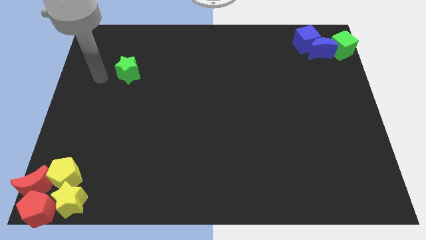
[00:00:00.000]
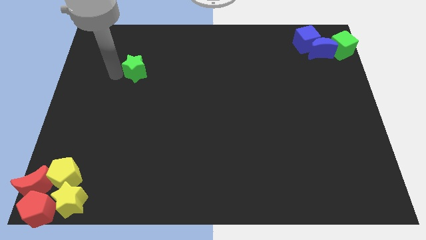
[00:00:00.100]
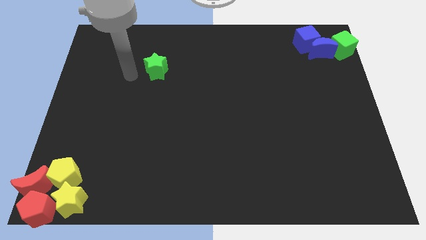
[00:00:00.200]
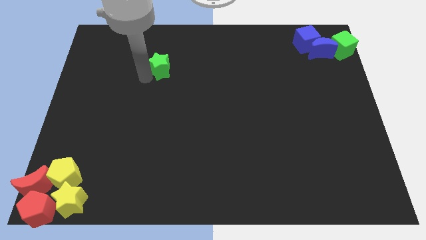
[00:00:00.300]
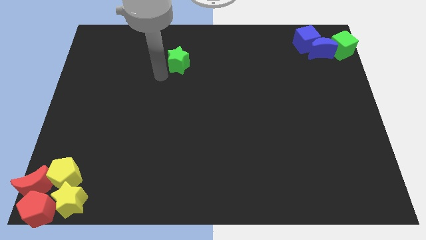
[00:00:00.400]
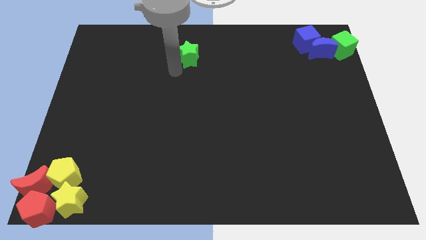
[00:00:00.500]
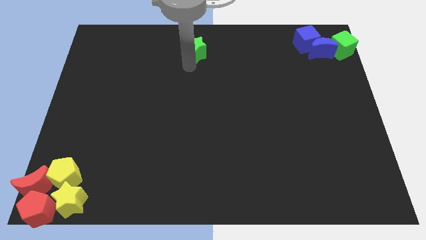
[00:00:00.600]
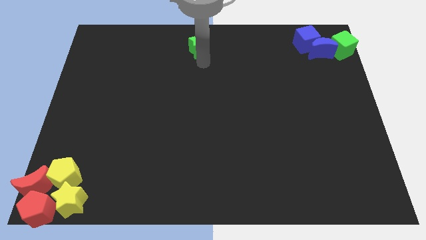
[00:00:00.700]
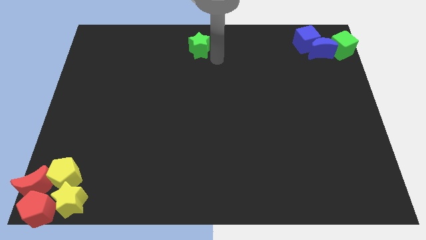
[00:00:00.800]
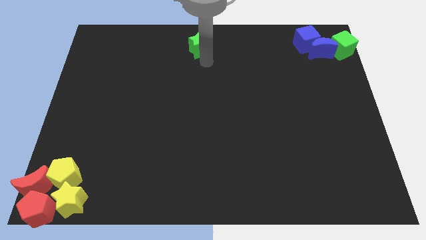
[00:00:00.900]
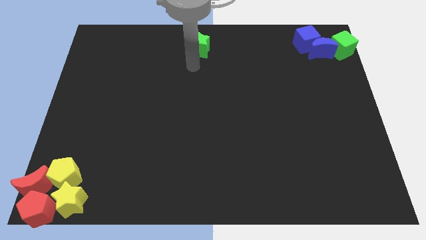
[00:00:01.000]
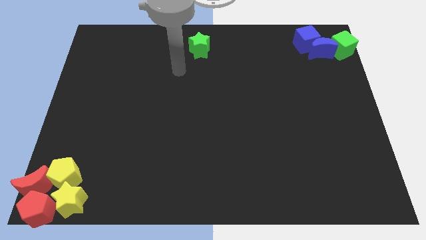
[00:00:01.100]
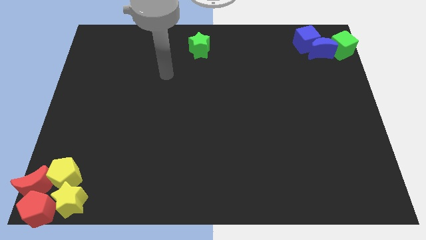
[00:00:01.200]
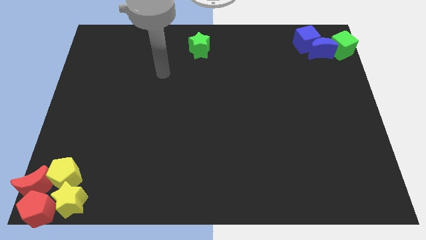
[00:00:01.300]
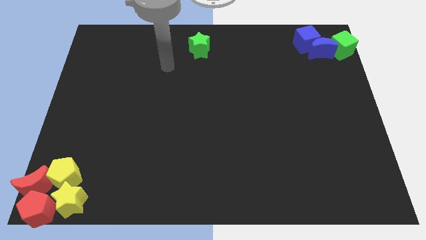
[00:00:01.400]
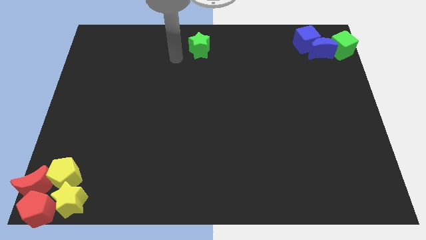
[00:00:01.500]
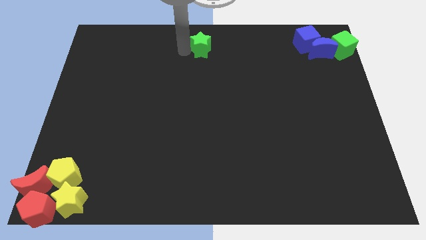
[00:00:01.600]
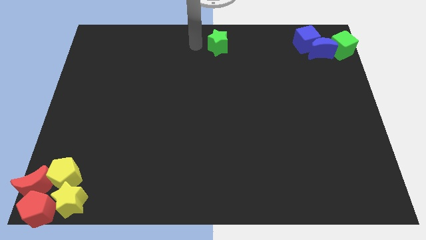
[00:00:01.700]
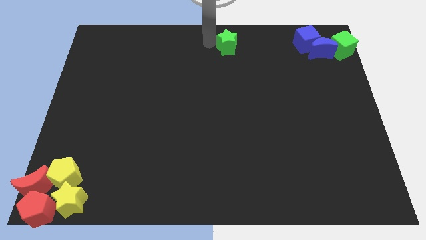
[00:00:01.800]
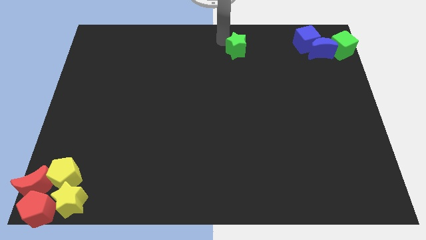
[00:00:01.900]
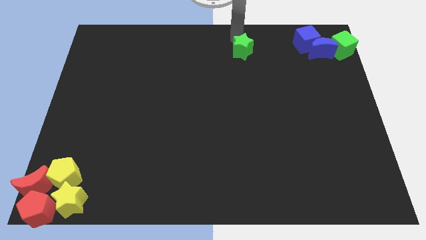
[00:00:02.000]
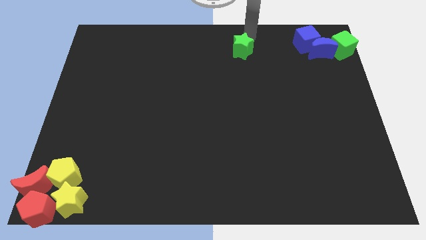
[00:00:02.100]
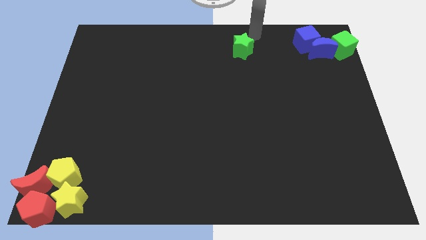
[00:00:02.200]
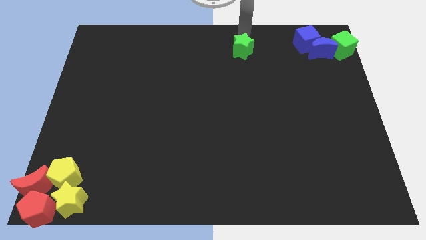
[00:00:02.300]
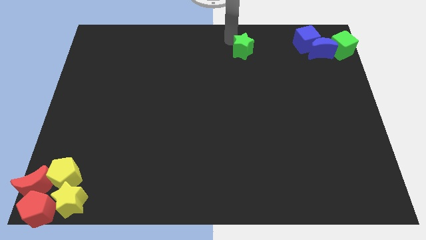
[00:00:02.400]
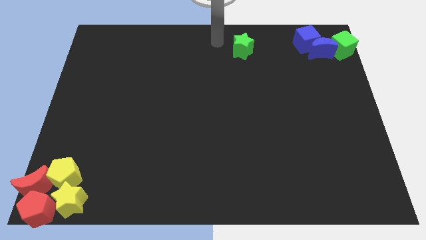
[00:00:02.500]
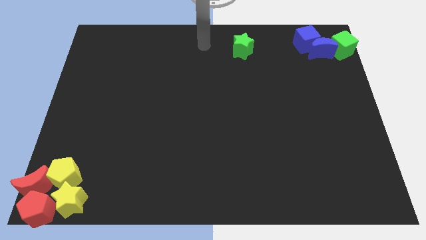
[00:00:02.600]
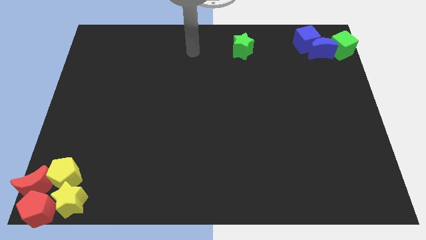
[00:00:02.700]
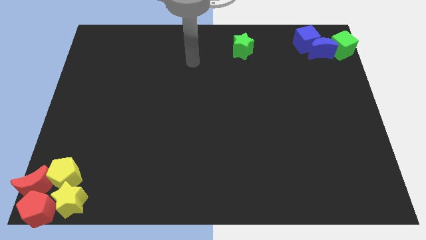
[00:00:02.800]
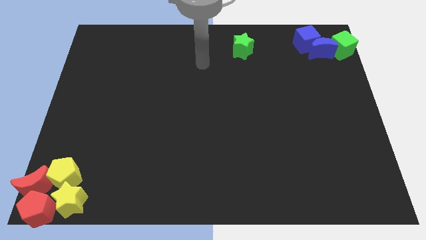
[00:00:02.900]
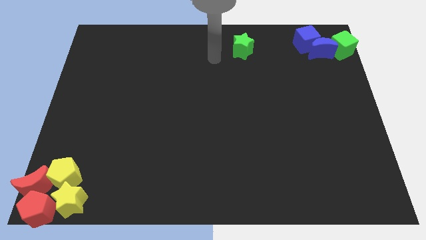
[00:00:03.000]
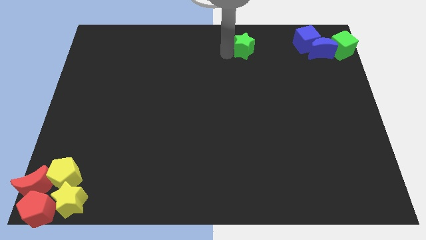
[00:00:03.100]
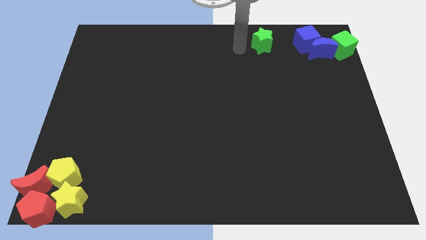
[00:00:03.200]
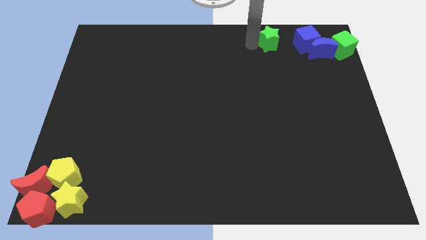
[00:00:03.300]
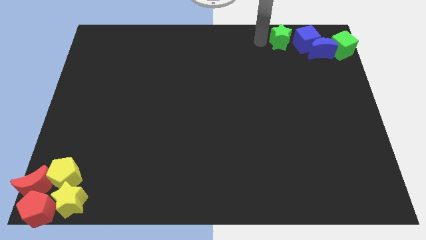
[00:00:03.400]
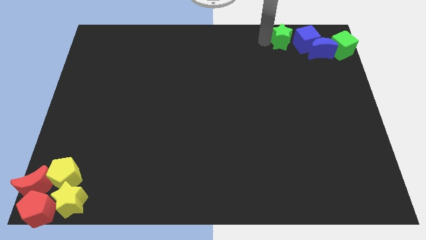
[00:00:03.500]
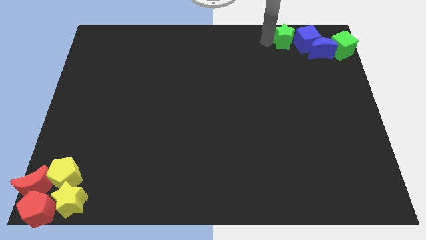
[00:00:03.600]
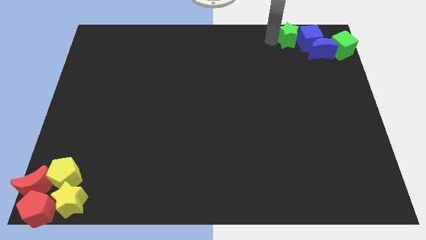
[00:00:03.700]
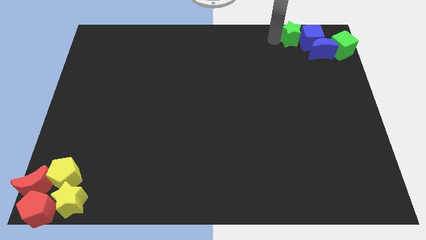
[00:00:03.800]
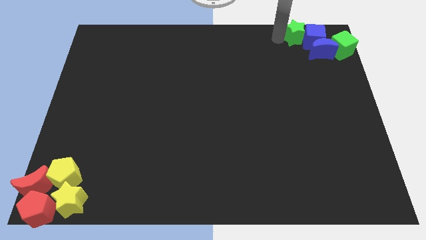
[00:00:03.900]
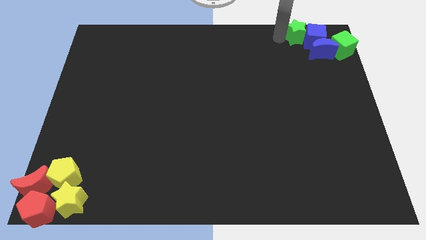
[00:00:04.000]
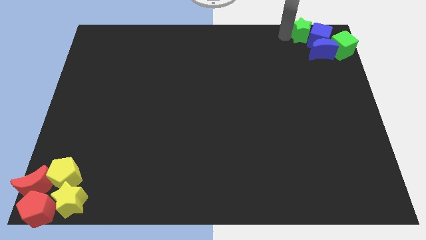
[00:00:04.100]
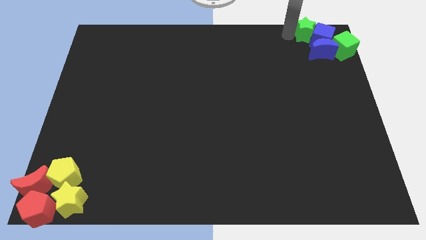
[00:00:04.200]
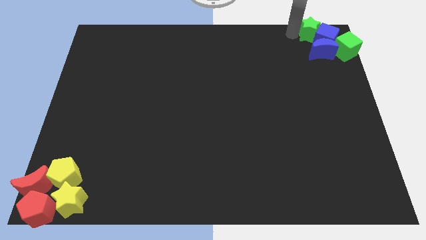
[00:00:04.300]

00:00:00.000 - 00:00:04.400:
place the green star at the top left of the blue cube

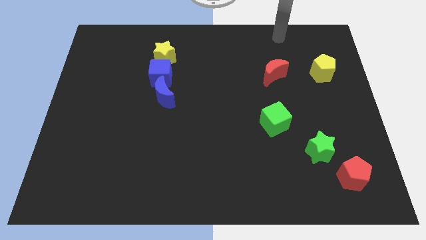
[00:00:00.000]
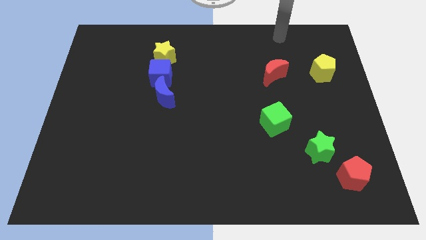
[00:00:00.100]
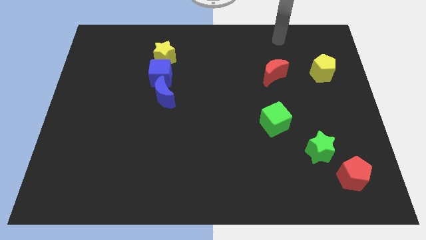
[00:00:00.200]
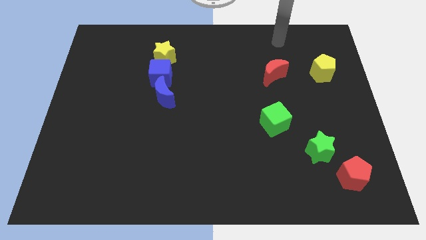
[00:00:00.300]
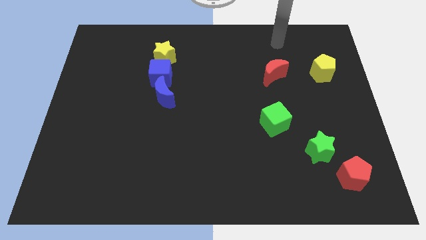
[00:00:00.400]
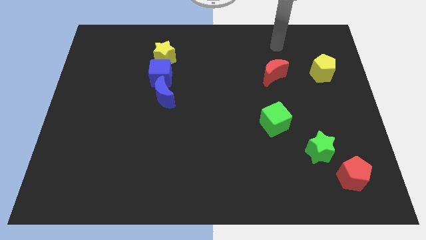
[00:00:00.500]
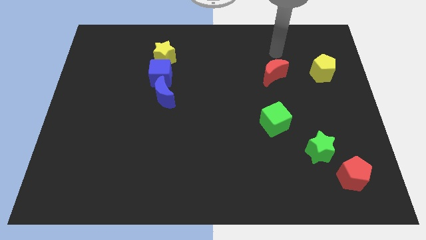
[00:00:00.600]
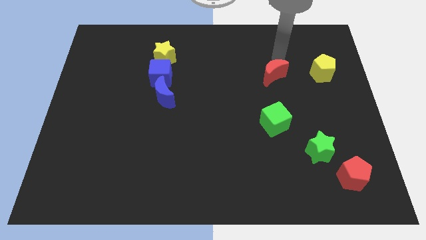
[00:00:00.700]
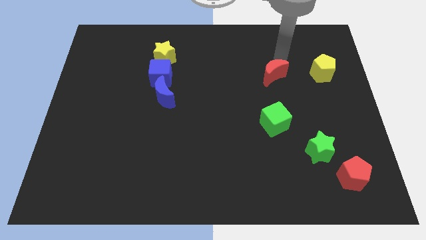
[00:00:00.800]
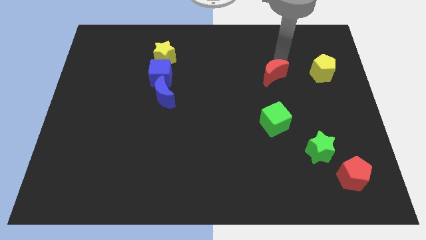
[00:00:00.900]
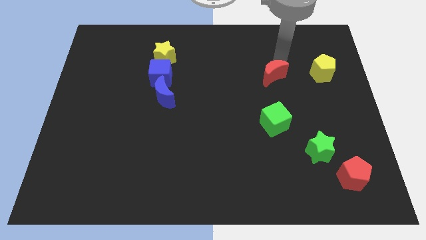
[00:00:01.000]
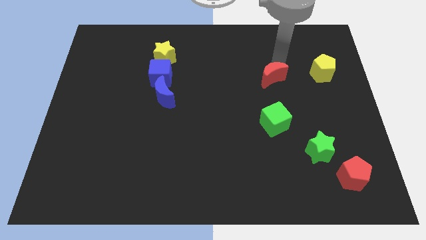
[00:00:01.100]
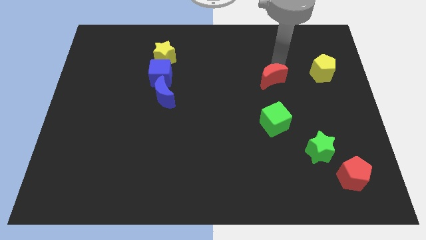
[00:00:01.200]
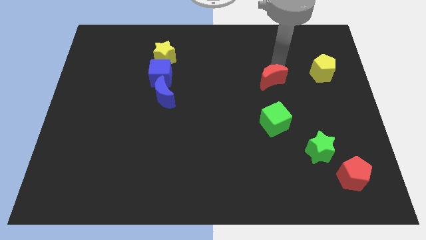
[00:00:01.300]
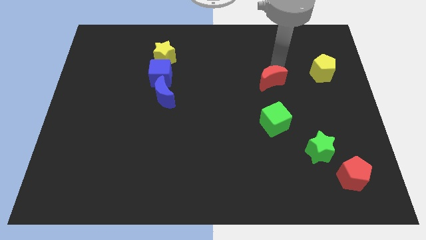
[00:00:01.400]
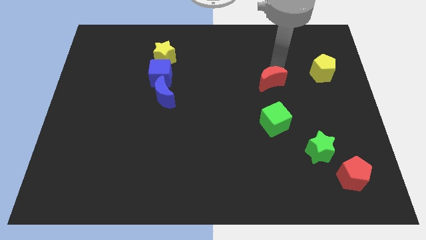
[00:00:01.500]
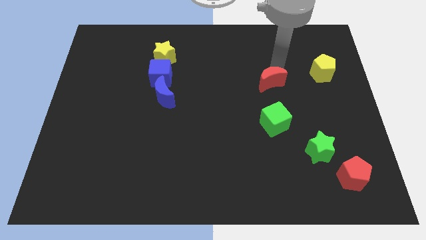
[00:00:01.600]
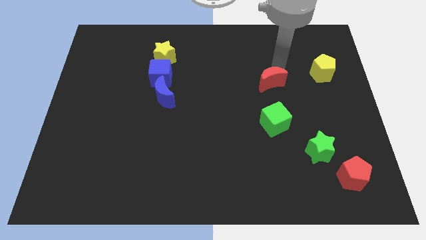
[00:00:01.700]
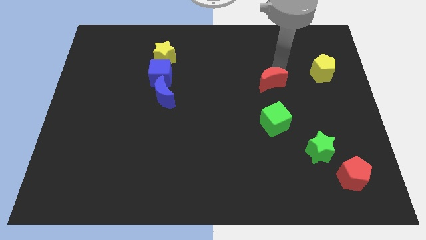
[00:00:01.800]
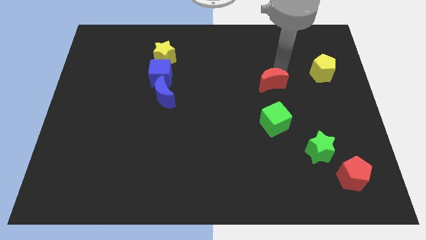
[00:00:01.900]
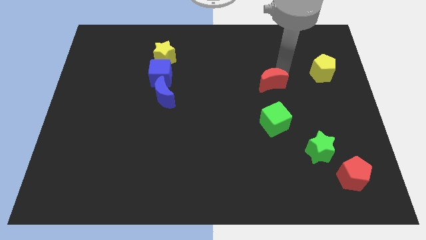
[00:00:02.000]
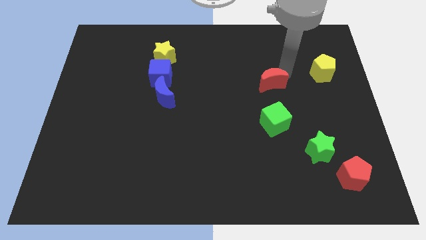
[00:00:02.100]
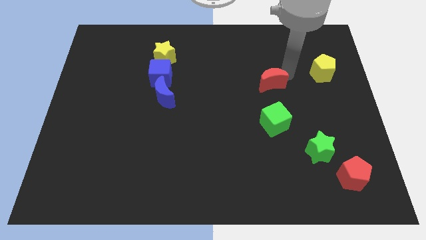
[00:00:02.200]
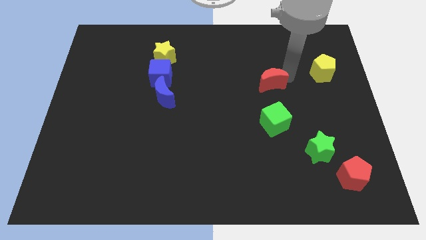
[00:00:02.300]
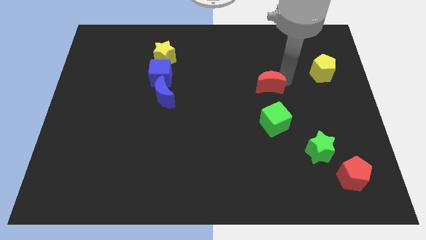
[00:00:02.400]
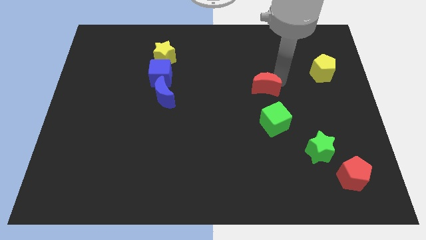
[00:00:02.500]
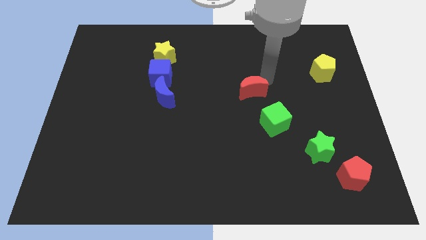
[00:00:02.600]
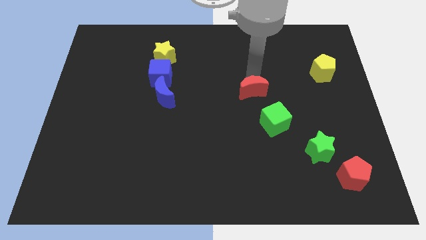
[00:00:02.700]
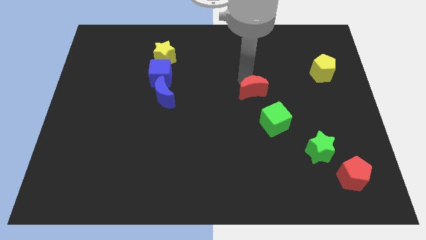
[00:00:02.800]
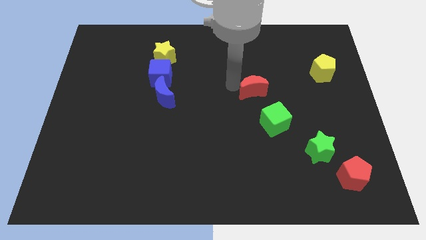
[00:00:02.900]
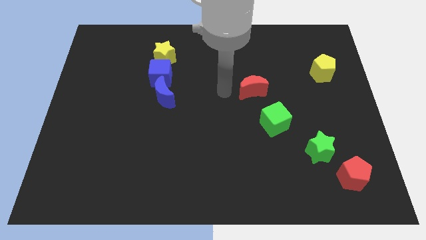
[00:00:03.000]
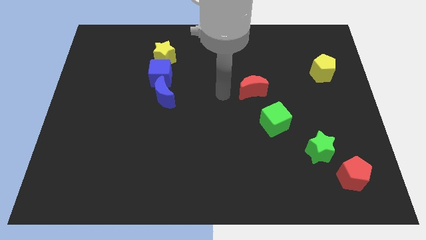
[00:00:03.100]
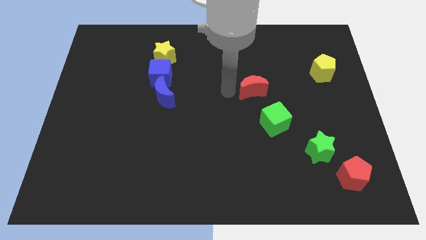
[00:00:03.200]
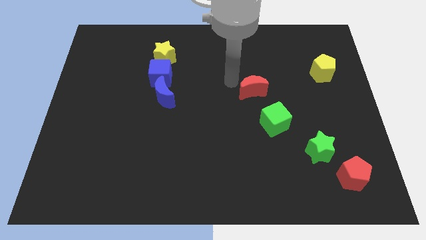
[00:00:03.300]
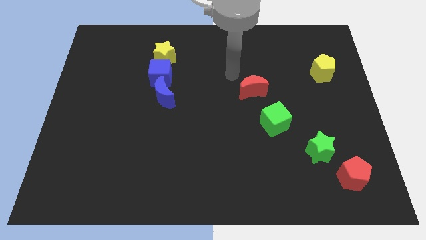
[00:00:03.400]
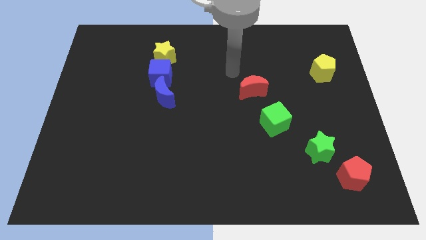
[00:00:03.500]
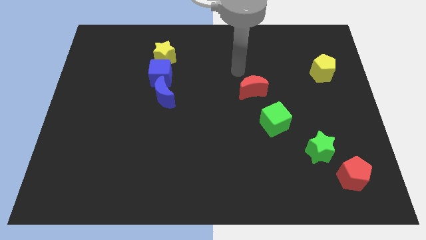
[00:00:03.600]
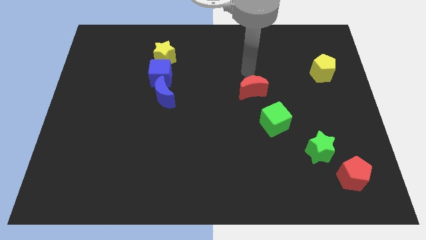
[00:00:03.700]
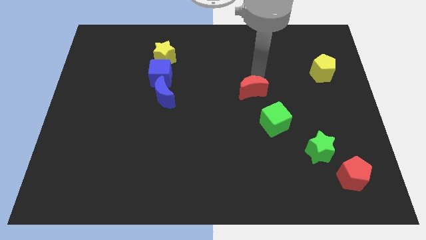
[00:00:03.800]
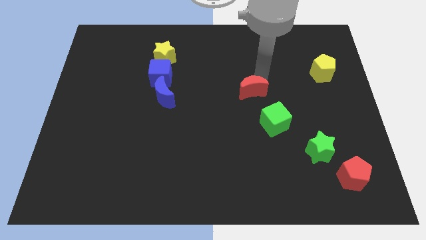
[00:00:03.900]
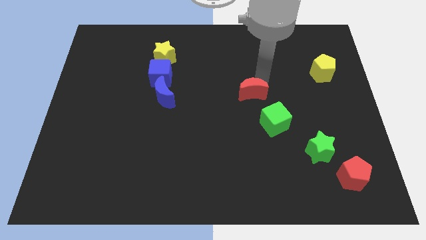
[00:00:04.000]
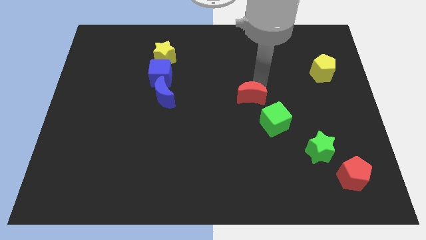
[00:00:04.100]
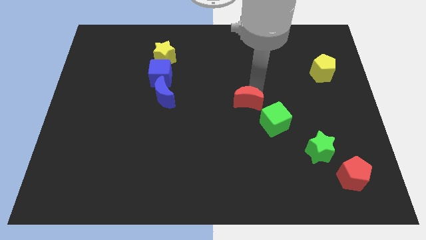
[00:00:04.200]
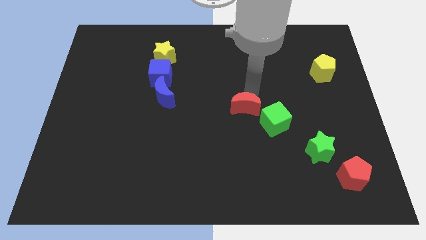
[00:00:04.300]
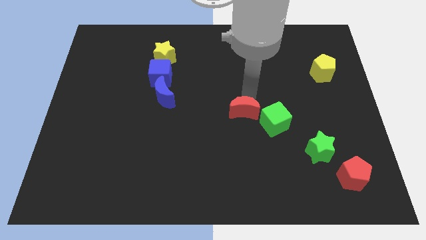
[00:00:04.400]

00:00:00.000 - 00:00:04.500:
place the red moon at the top left of green cube

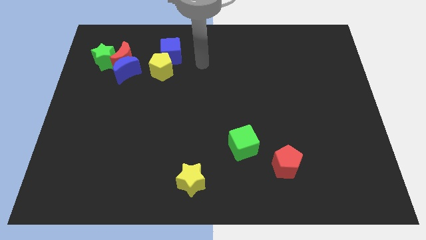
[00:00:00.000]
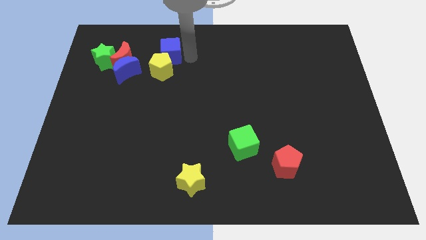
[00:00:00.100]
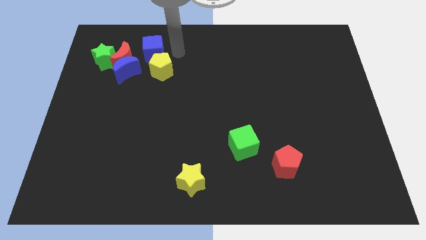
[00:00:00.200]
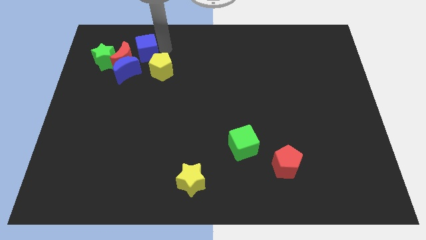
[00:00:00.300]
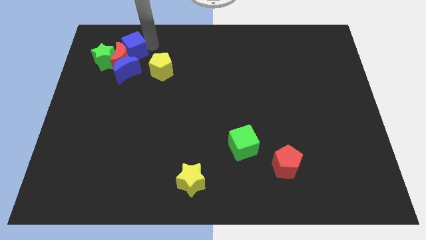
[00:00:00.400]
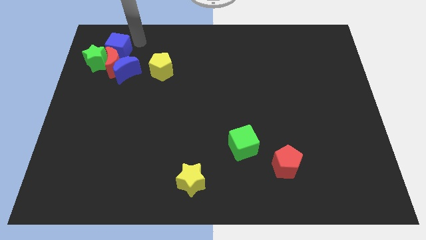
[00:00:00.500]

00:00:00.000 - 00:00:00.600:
move the blue cube into the red crescent
